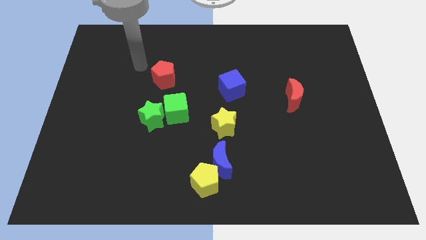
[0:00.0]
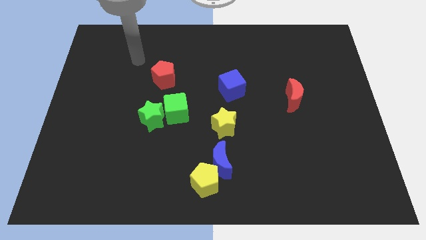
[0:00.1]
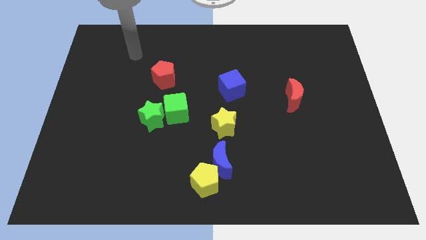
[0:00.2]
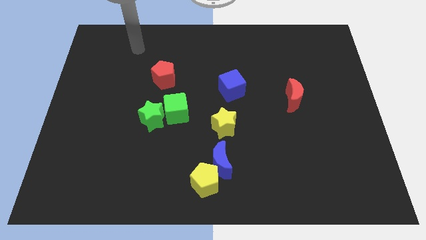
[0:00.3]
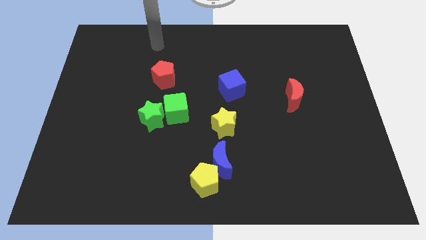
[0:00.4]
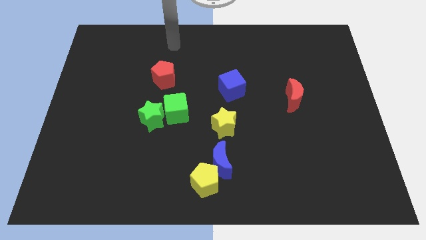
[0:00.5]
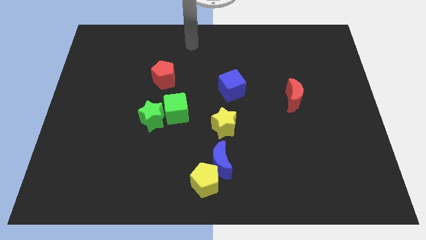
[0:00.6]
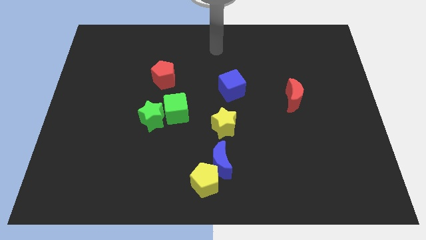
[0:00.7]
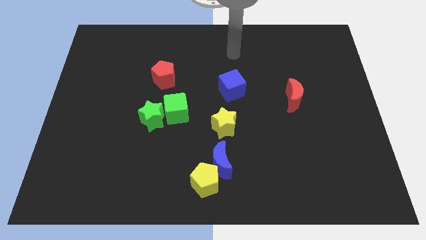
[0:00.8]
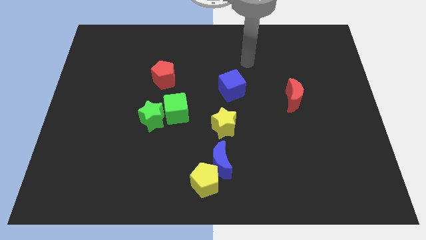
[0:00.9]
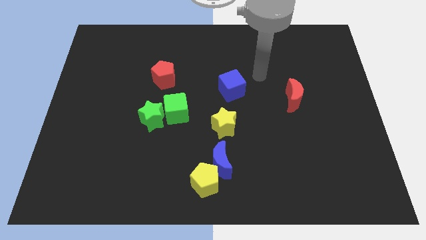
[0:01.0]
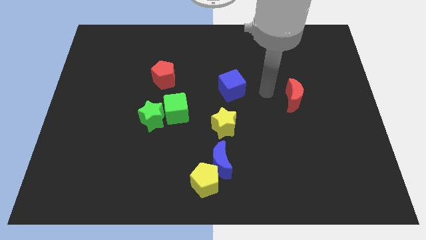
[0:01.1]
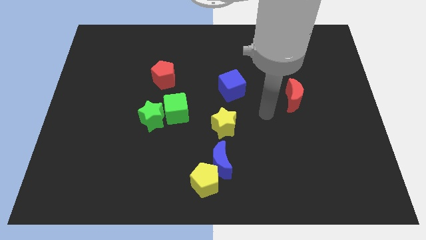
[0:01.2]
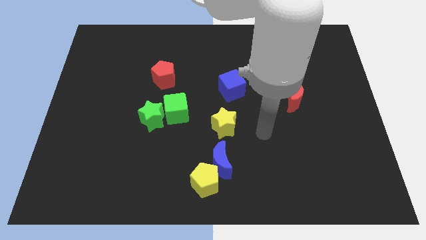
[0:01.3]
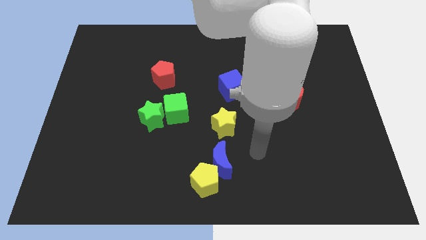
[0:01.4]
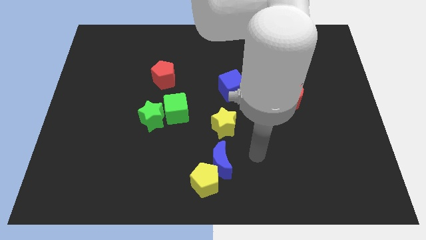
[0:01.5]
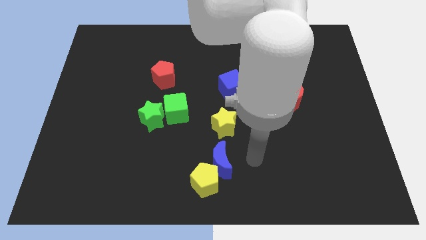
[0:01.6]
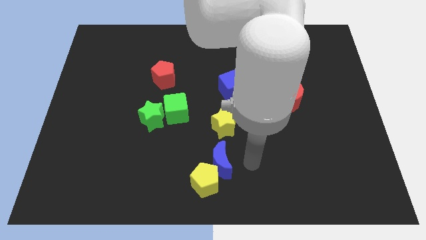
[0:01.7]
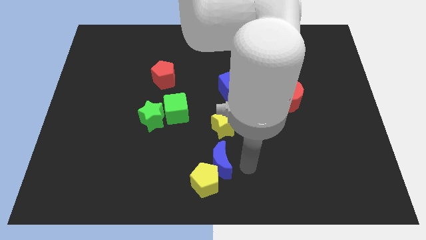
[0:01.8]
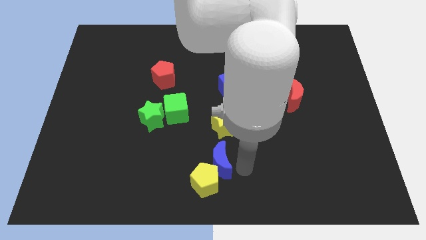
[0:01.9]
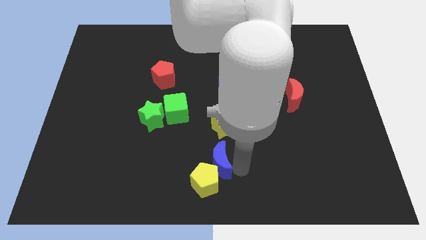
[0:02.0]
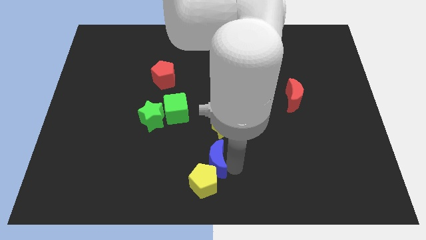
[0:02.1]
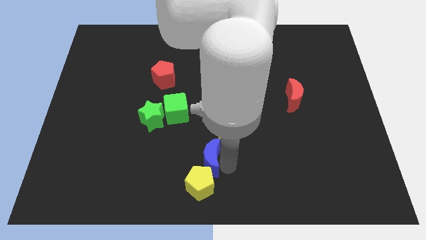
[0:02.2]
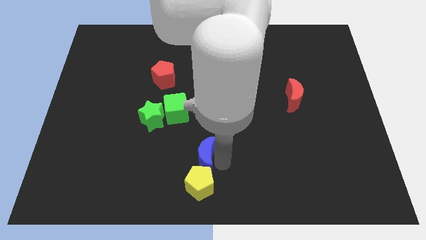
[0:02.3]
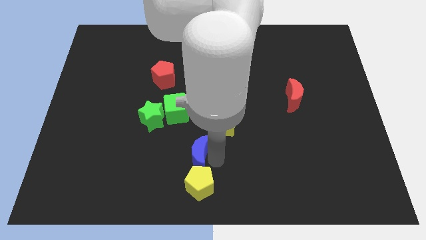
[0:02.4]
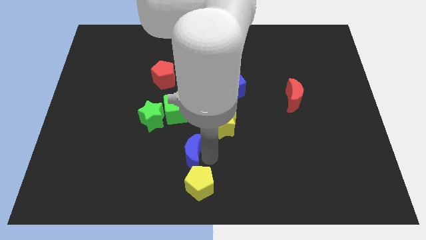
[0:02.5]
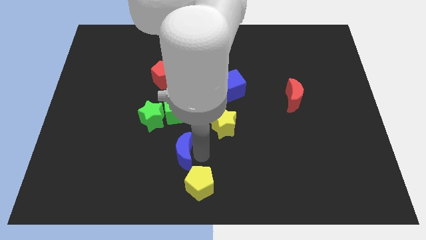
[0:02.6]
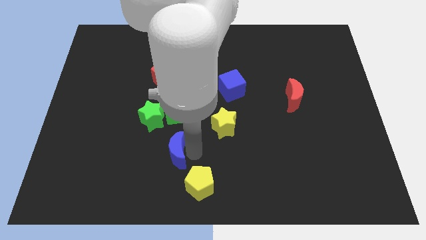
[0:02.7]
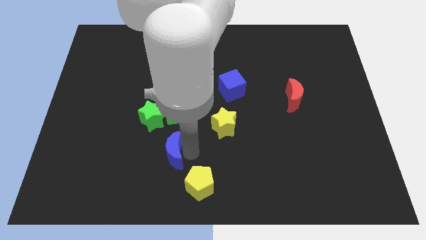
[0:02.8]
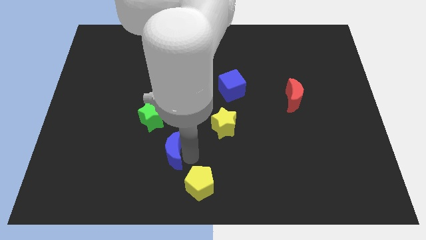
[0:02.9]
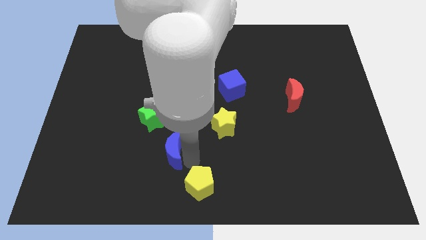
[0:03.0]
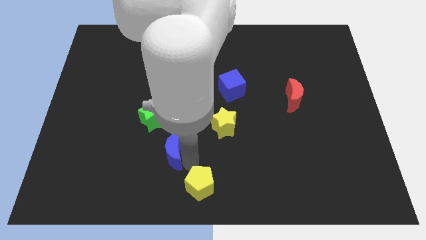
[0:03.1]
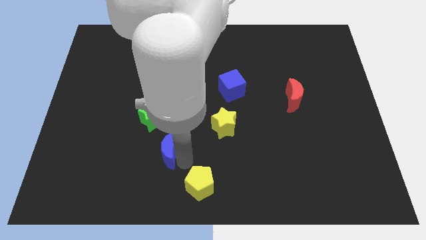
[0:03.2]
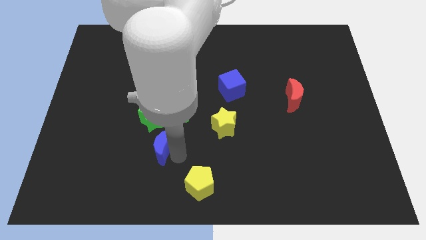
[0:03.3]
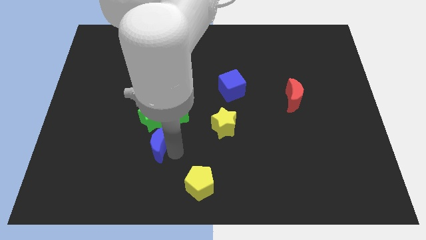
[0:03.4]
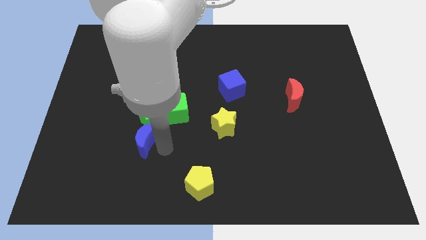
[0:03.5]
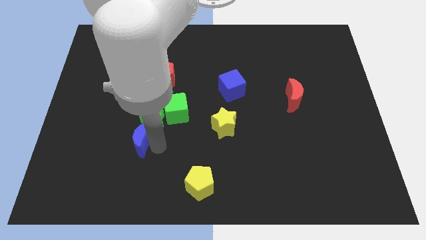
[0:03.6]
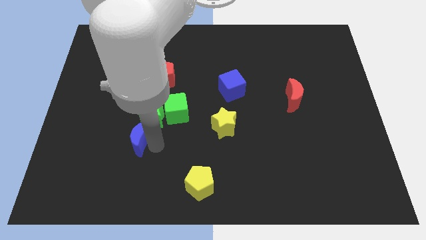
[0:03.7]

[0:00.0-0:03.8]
slide the blue moon close to the green star

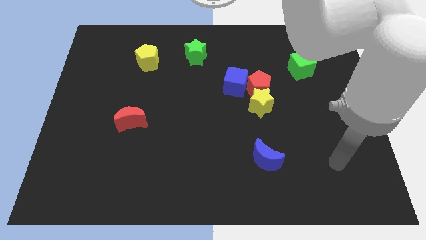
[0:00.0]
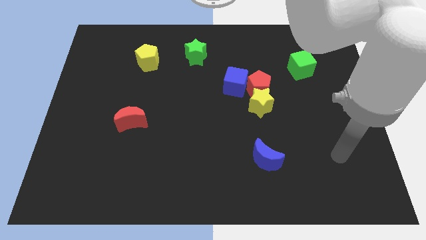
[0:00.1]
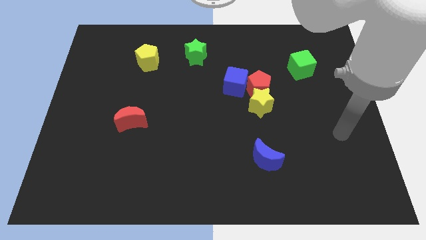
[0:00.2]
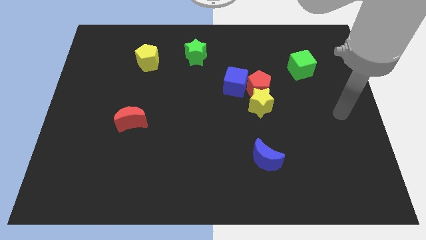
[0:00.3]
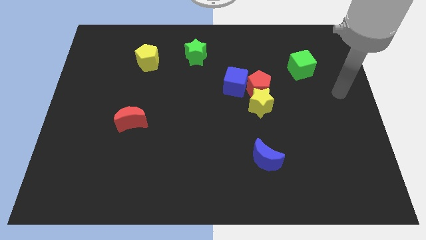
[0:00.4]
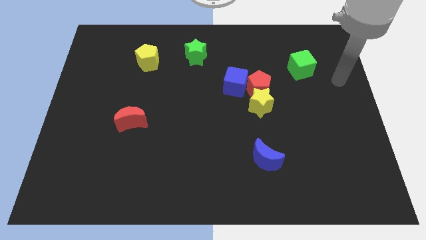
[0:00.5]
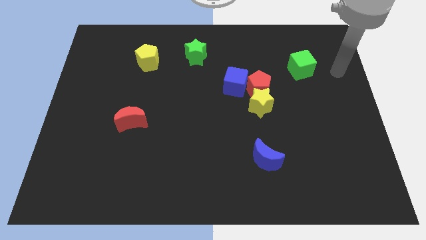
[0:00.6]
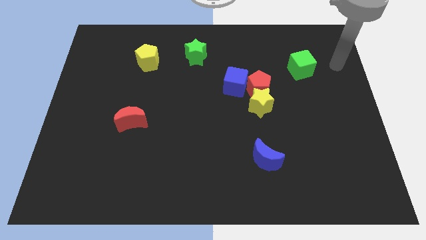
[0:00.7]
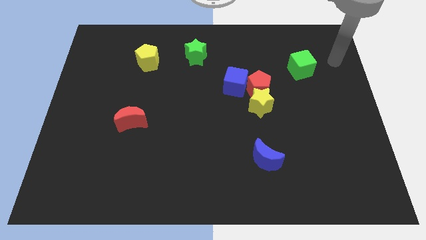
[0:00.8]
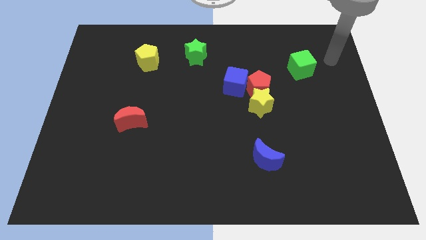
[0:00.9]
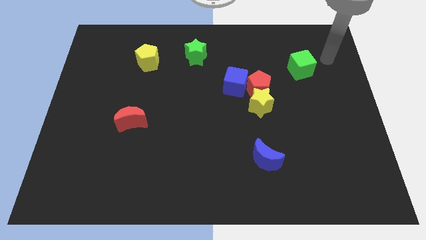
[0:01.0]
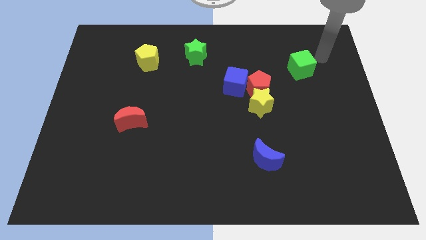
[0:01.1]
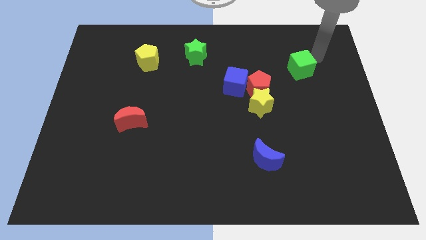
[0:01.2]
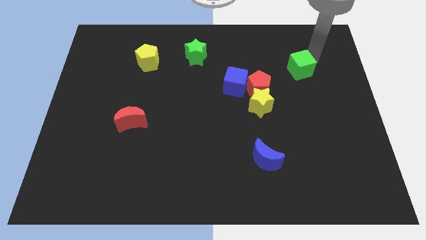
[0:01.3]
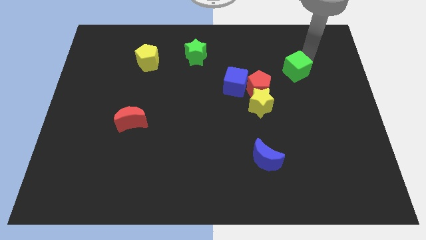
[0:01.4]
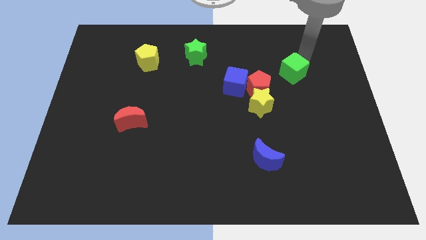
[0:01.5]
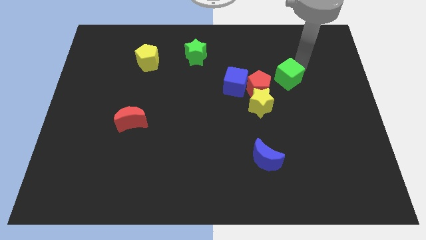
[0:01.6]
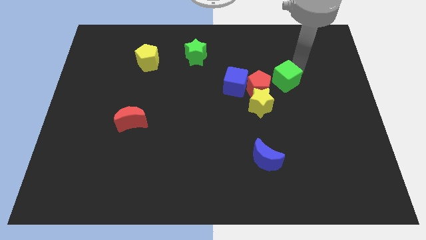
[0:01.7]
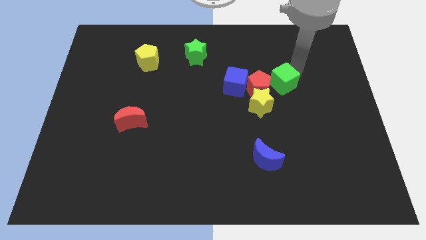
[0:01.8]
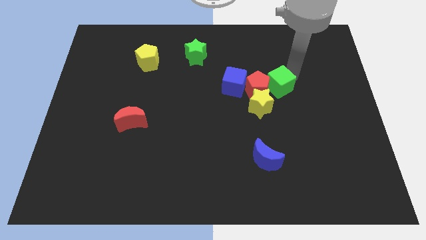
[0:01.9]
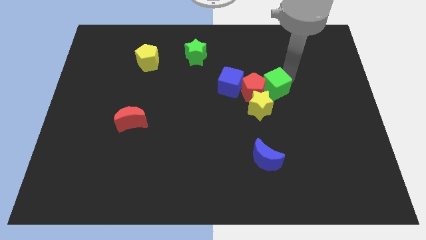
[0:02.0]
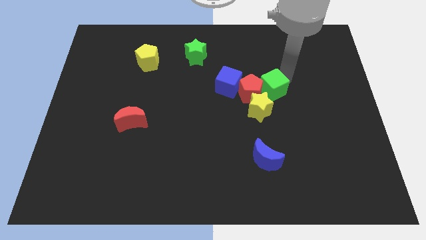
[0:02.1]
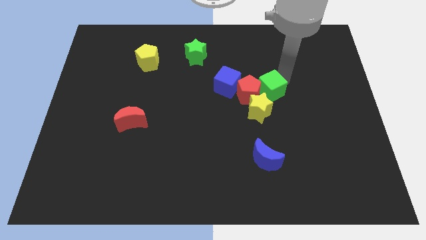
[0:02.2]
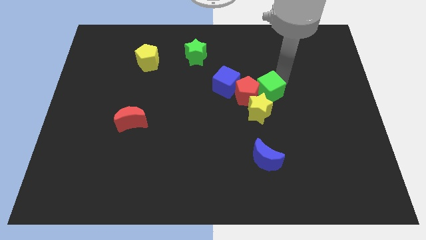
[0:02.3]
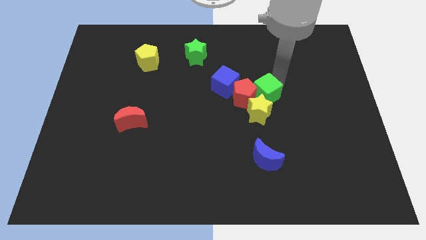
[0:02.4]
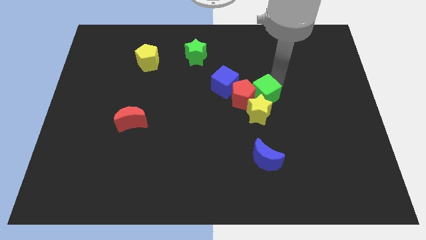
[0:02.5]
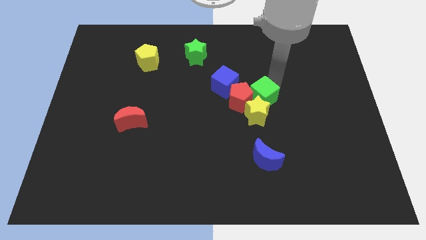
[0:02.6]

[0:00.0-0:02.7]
move the green cube next to the yellow star

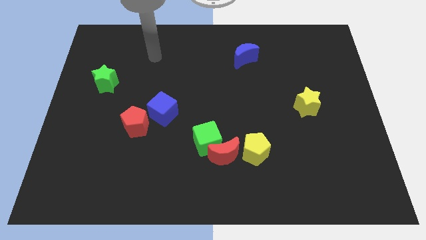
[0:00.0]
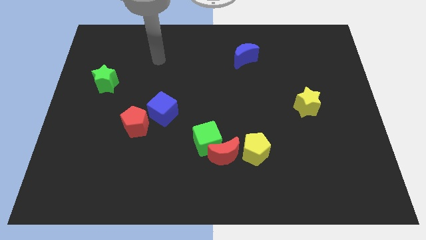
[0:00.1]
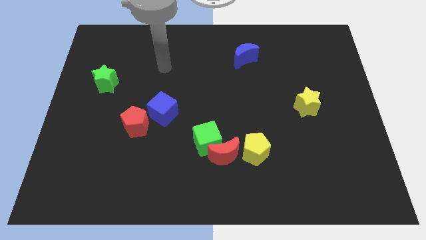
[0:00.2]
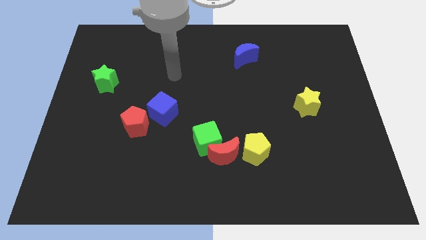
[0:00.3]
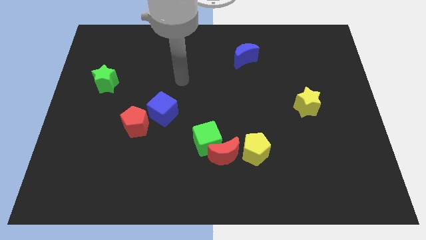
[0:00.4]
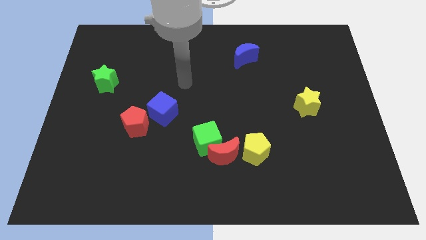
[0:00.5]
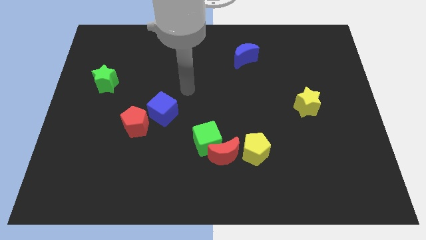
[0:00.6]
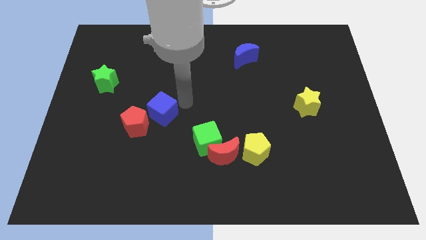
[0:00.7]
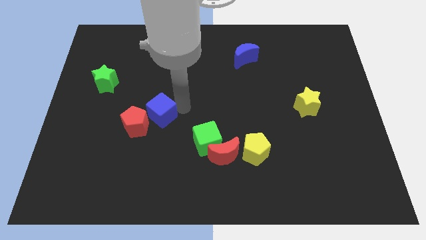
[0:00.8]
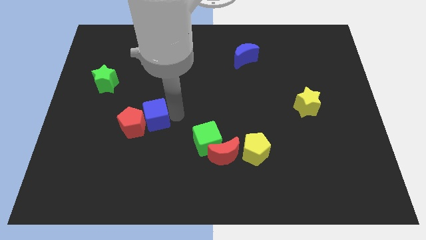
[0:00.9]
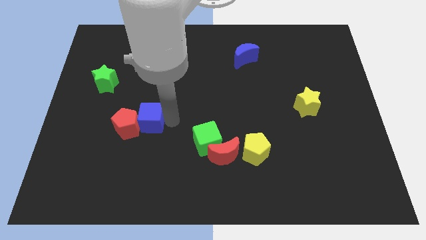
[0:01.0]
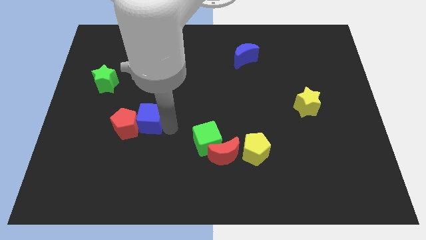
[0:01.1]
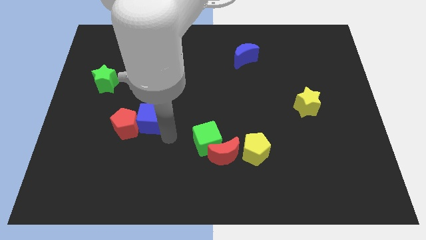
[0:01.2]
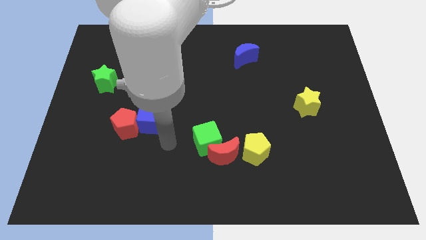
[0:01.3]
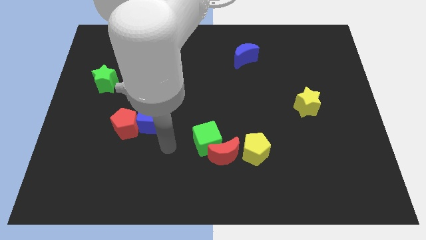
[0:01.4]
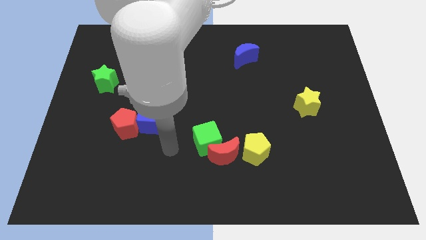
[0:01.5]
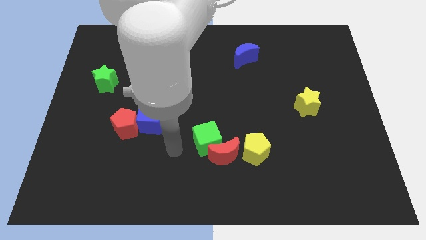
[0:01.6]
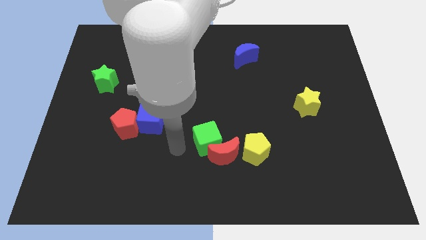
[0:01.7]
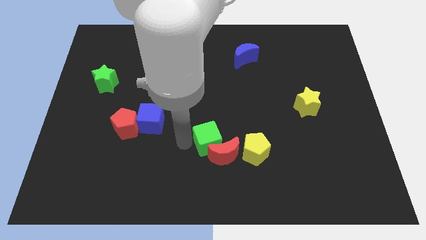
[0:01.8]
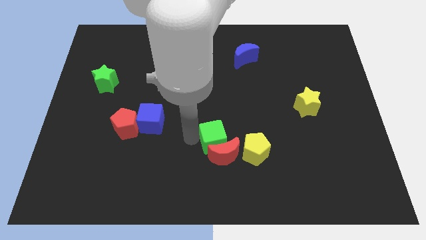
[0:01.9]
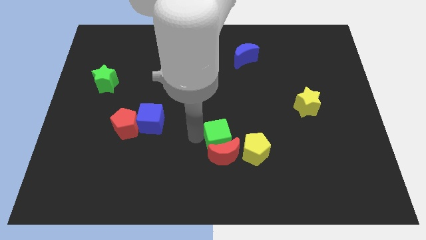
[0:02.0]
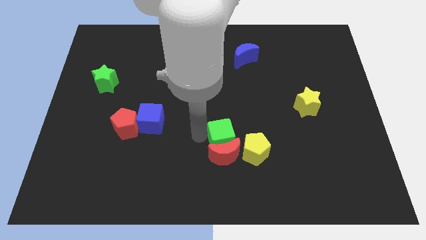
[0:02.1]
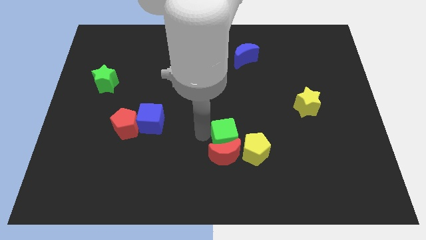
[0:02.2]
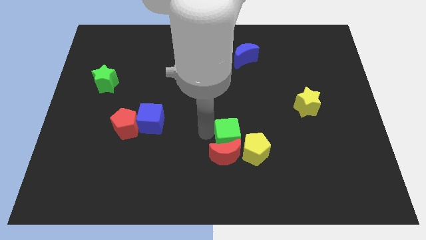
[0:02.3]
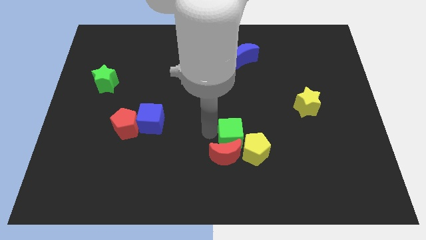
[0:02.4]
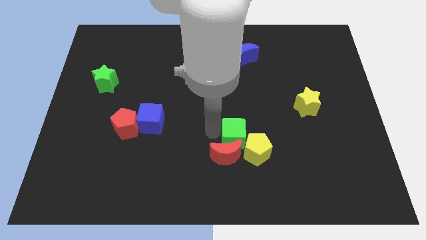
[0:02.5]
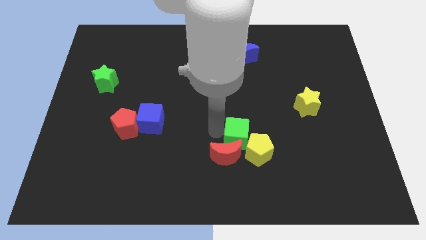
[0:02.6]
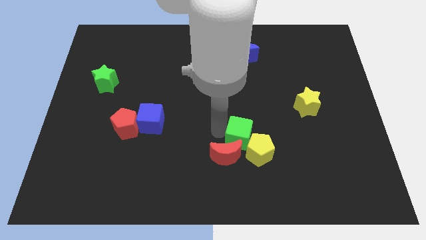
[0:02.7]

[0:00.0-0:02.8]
push the green cube to the yellow pentagon
